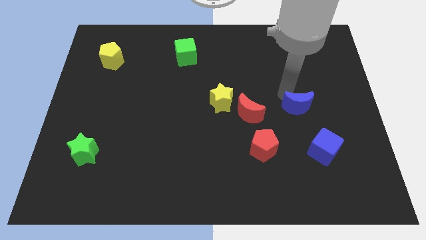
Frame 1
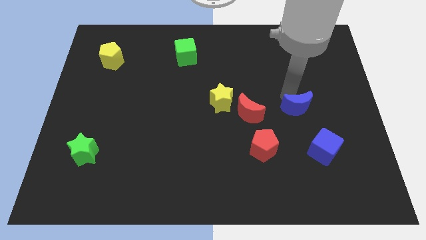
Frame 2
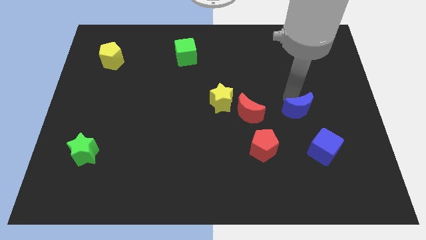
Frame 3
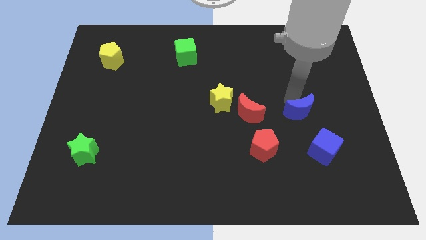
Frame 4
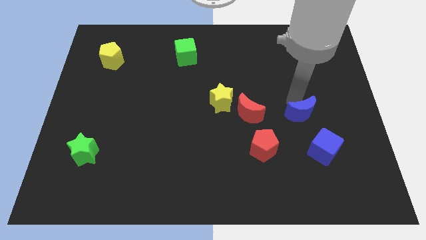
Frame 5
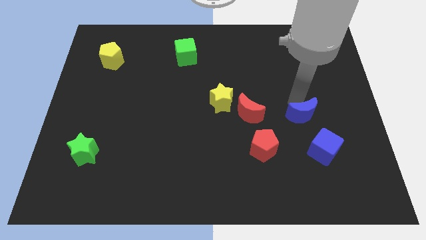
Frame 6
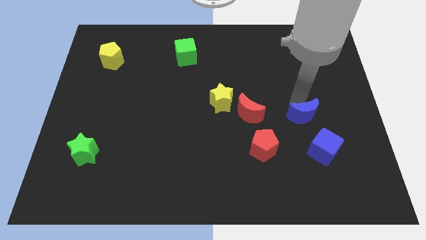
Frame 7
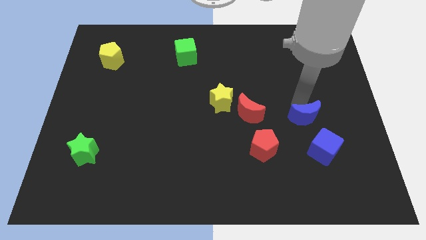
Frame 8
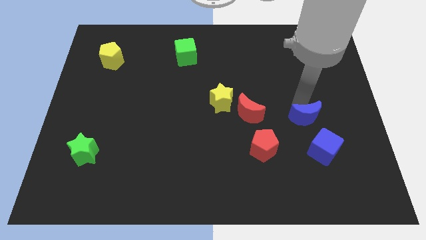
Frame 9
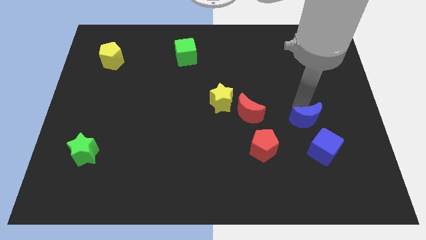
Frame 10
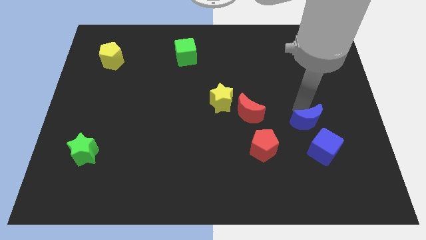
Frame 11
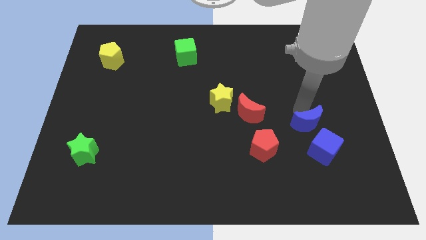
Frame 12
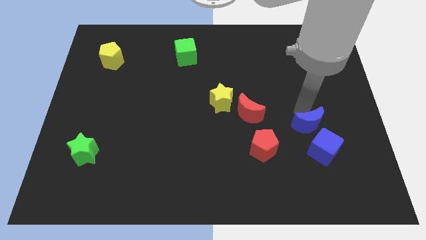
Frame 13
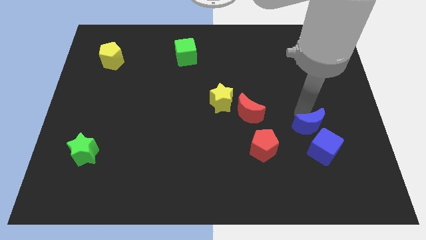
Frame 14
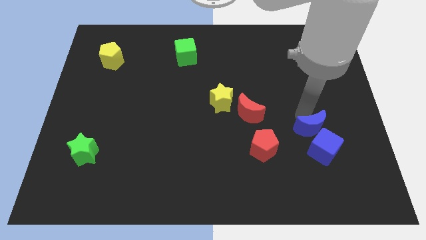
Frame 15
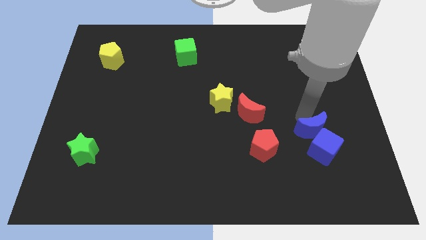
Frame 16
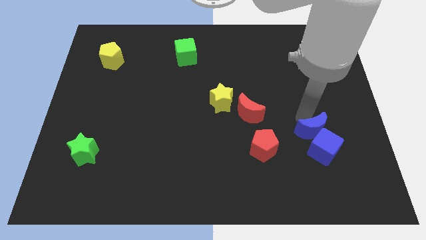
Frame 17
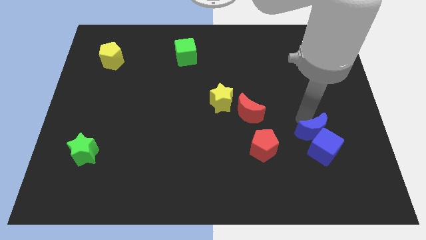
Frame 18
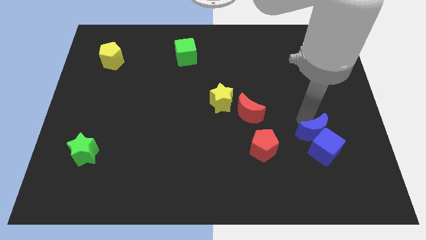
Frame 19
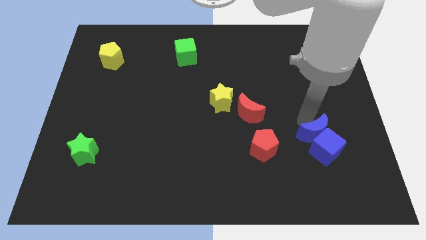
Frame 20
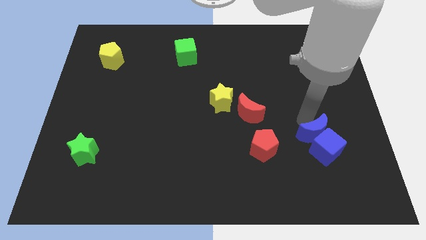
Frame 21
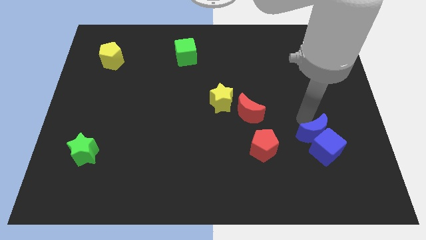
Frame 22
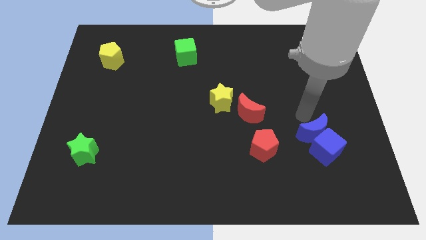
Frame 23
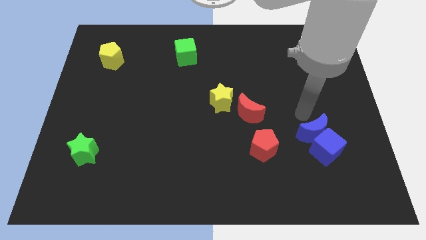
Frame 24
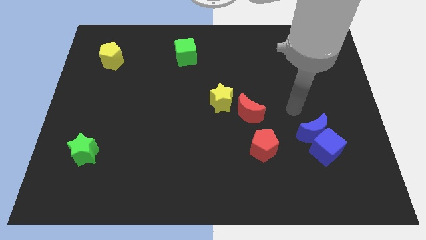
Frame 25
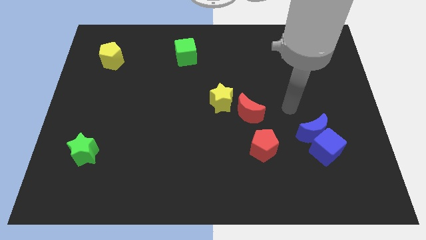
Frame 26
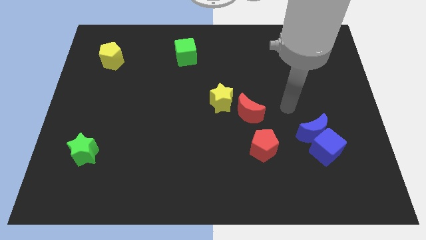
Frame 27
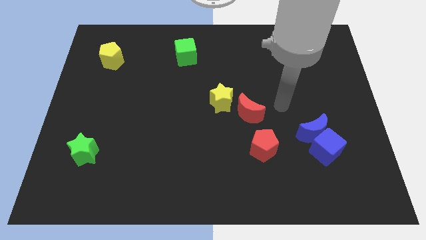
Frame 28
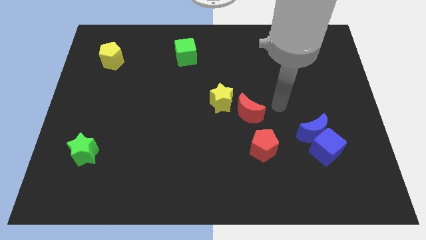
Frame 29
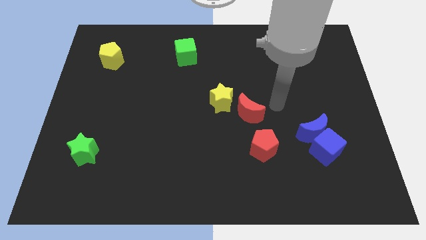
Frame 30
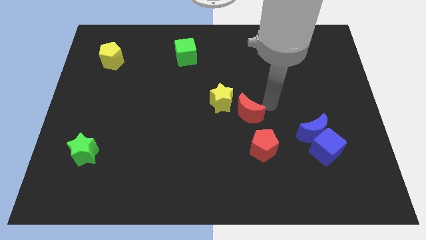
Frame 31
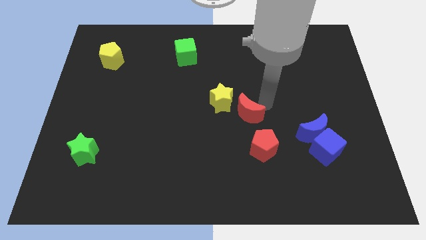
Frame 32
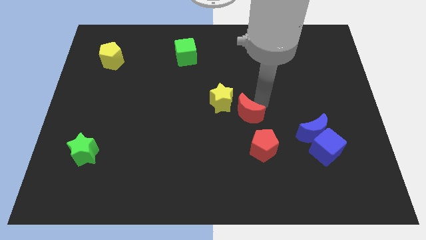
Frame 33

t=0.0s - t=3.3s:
push the blue moon into the blue cube

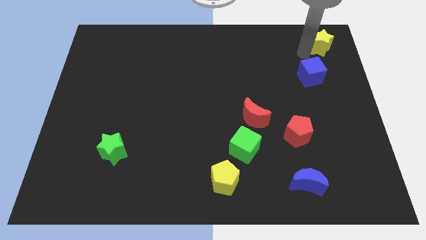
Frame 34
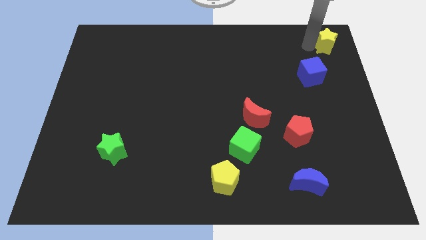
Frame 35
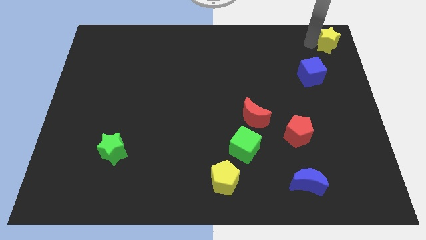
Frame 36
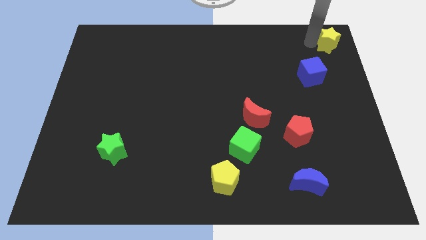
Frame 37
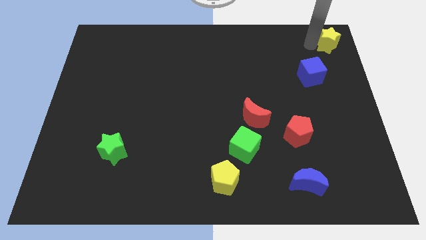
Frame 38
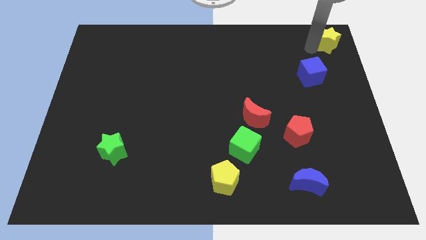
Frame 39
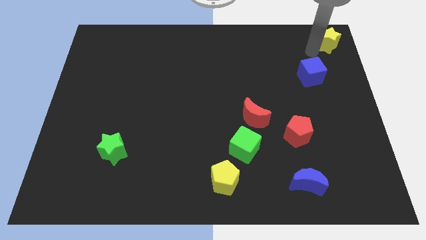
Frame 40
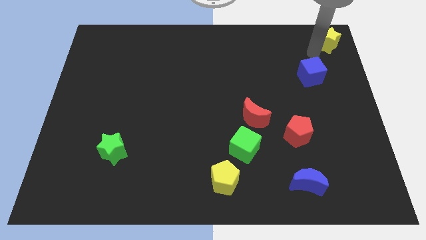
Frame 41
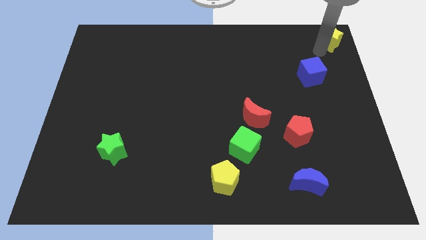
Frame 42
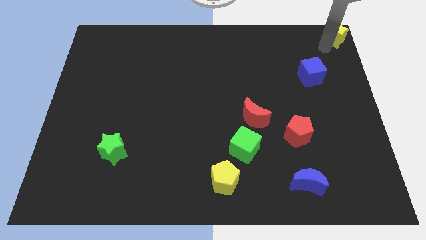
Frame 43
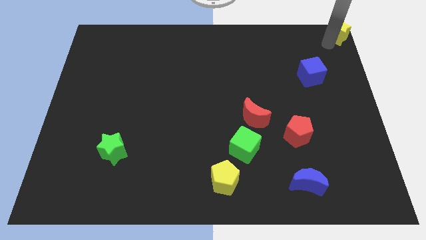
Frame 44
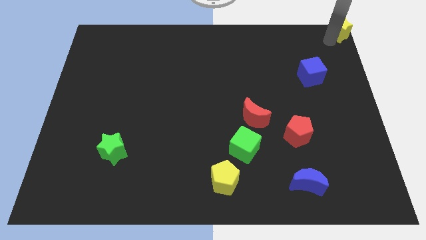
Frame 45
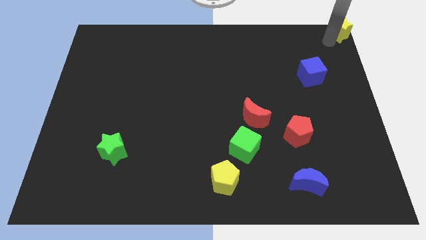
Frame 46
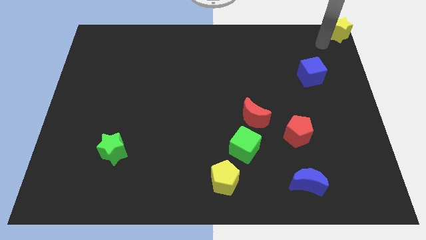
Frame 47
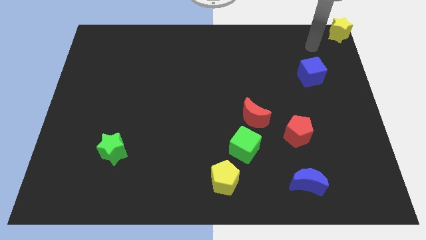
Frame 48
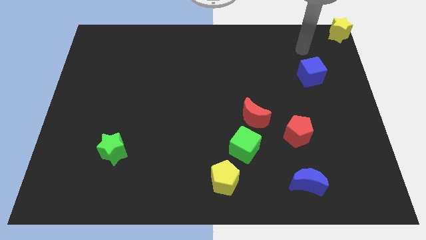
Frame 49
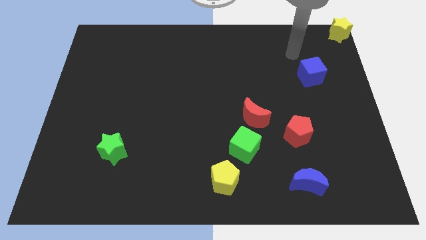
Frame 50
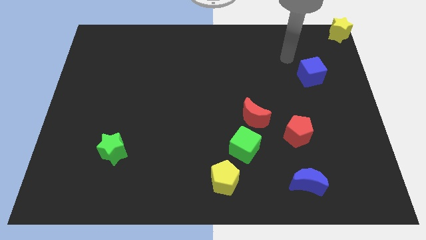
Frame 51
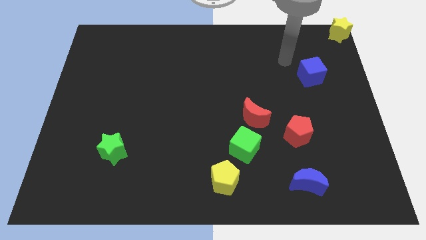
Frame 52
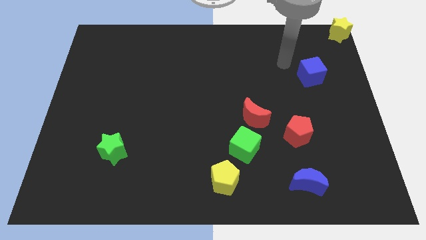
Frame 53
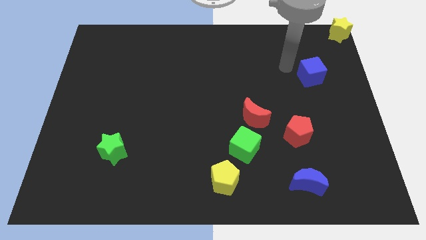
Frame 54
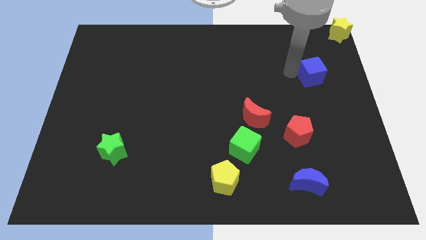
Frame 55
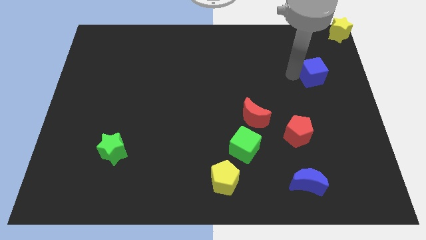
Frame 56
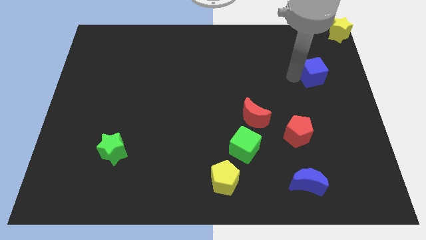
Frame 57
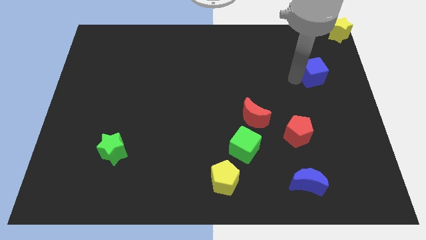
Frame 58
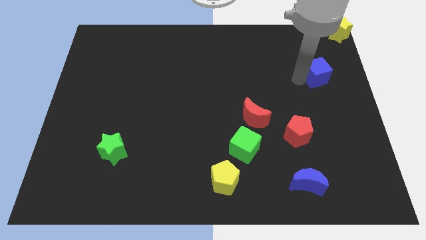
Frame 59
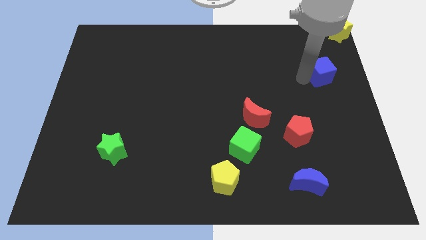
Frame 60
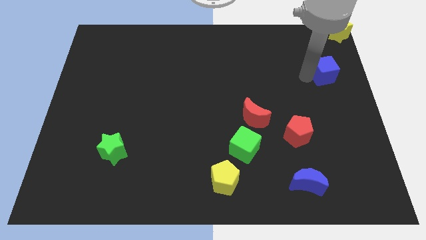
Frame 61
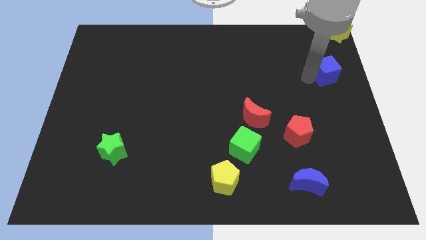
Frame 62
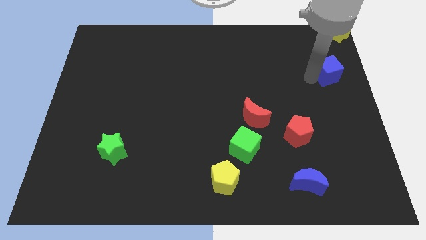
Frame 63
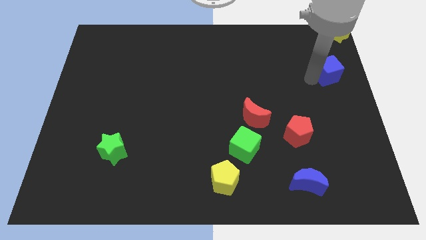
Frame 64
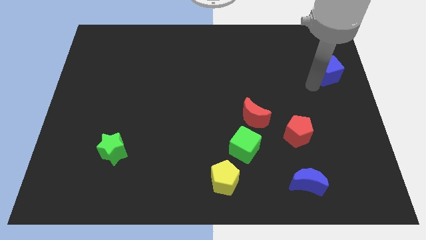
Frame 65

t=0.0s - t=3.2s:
move the yellow star to the top right corner of the board

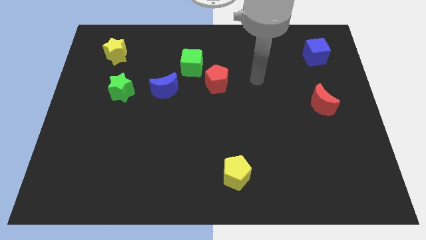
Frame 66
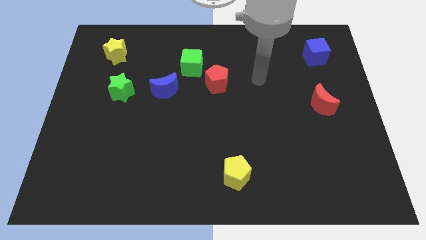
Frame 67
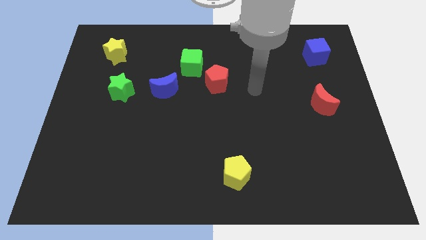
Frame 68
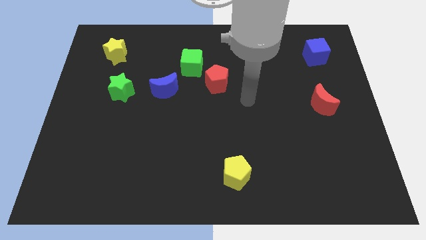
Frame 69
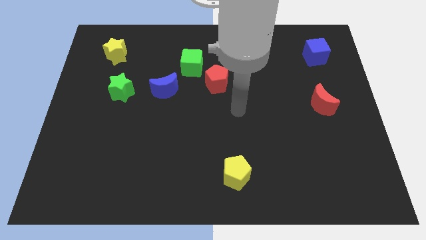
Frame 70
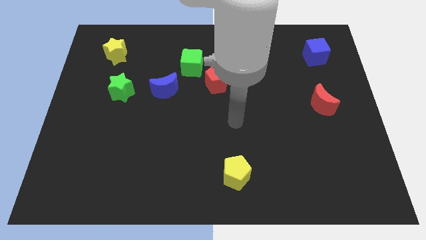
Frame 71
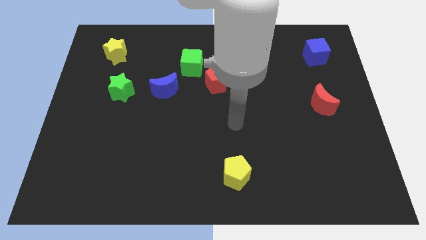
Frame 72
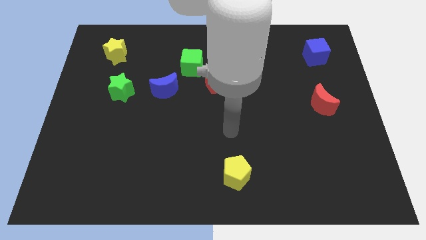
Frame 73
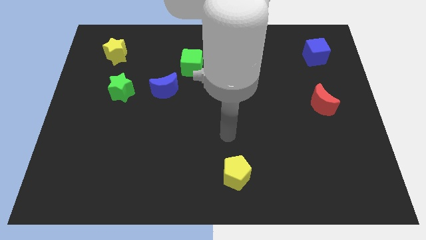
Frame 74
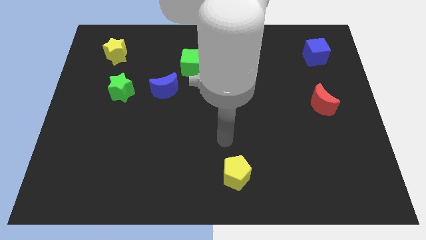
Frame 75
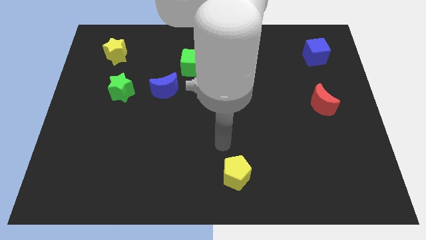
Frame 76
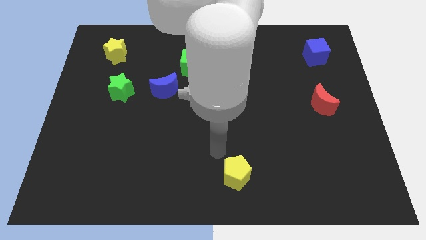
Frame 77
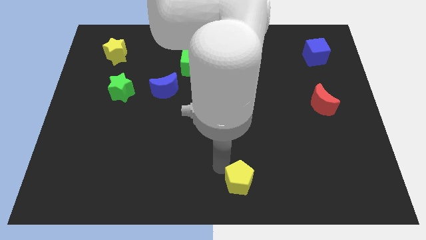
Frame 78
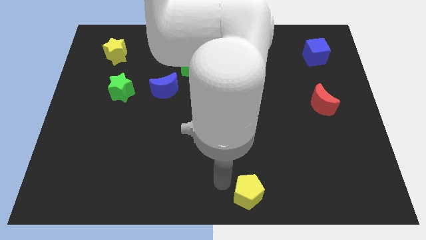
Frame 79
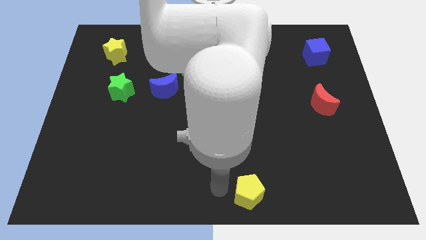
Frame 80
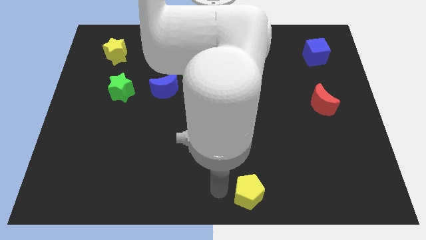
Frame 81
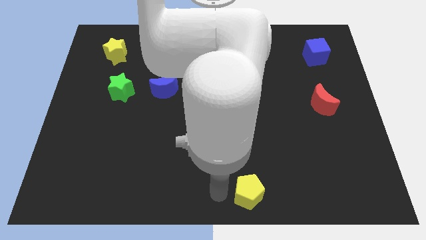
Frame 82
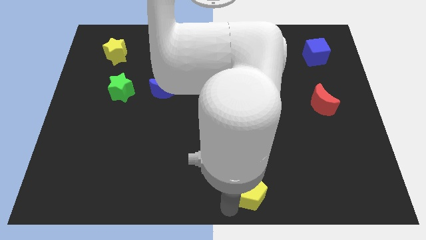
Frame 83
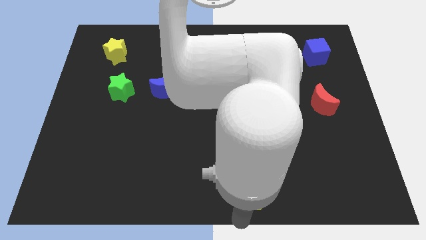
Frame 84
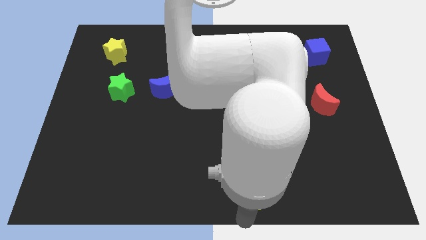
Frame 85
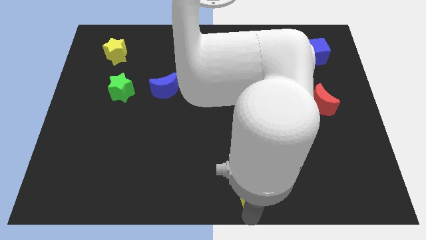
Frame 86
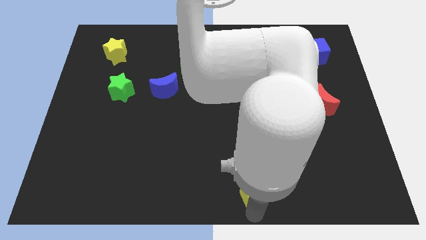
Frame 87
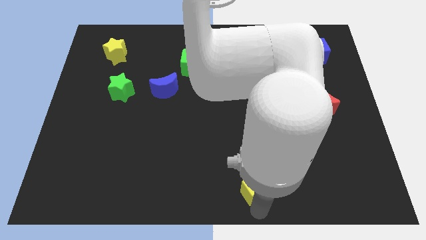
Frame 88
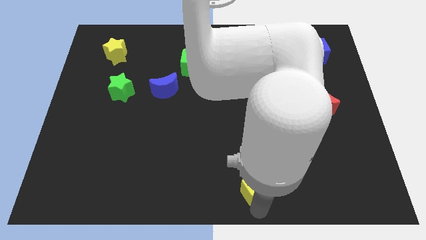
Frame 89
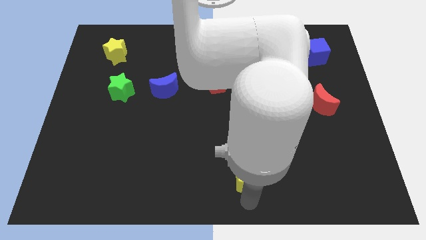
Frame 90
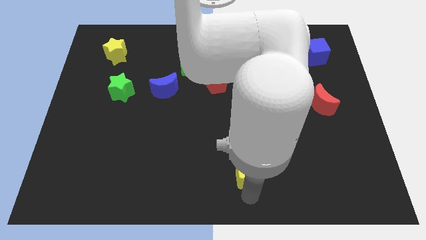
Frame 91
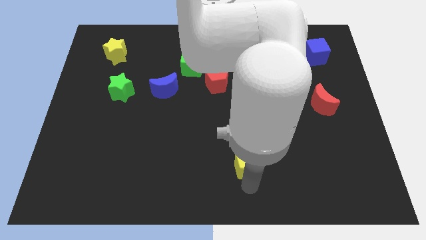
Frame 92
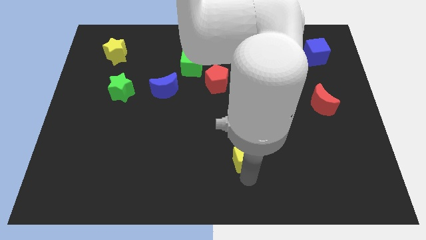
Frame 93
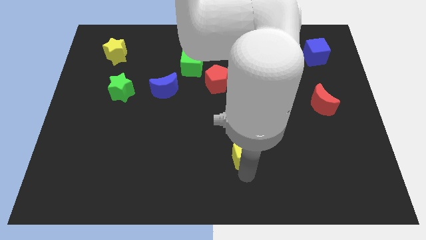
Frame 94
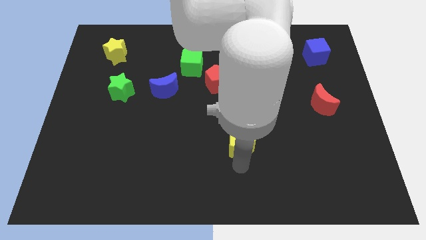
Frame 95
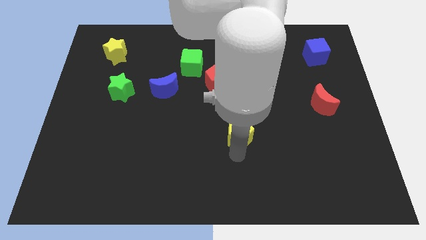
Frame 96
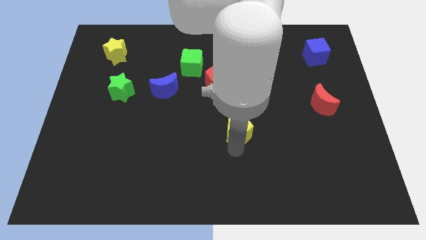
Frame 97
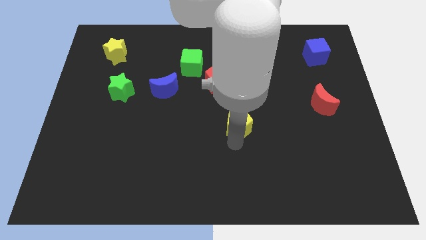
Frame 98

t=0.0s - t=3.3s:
drag the yellow pentagon to the top
